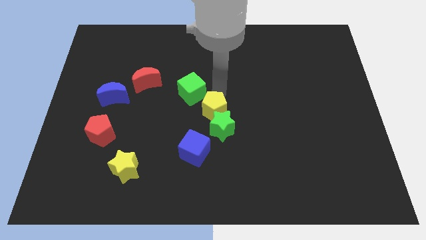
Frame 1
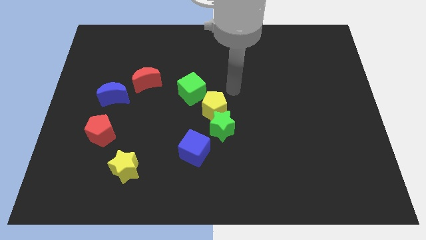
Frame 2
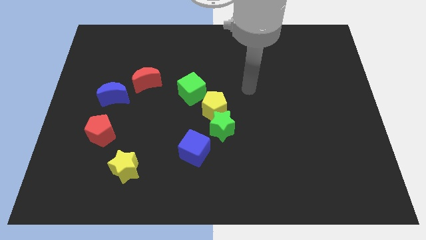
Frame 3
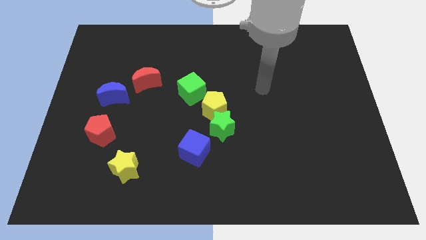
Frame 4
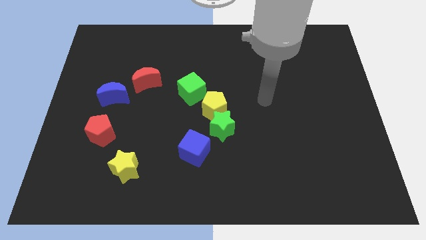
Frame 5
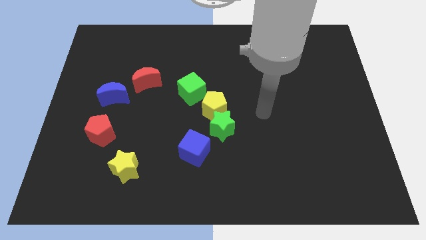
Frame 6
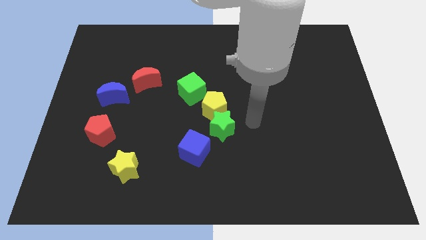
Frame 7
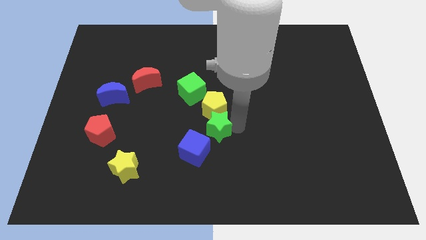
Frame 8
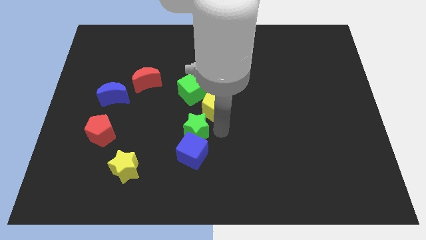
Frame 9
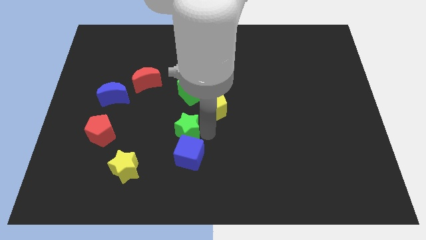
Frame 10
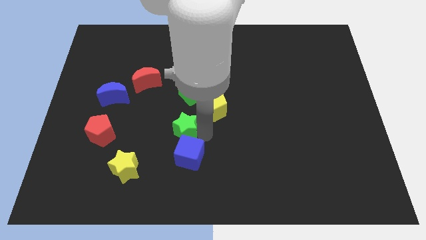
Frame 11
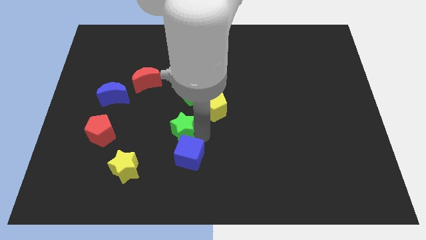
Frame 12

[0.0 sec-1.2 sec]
separate the green star from the yellow pentagon

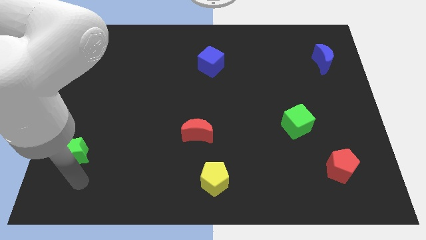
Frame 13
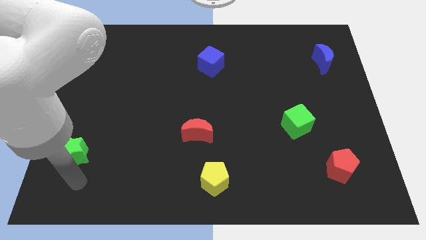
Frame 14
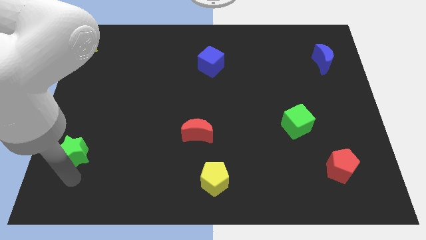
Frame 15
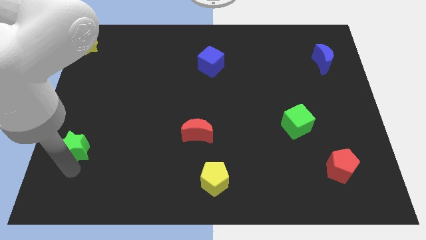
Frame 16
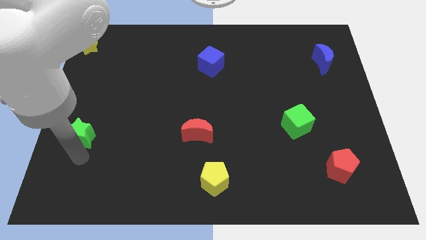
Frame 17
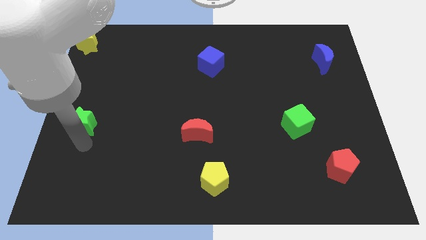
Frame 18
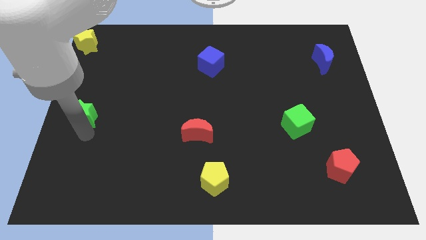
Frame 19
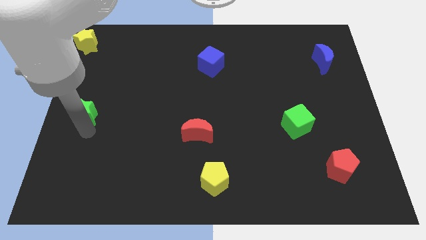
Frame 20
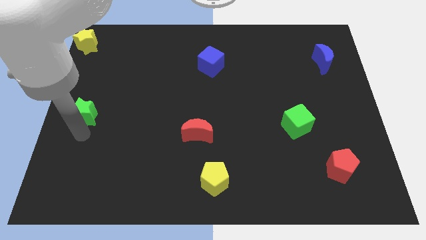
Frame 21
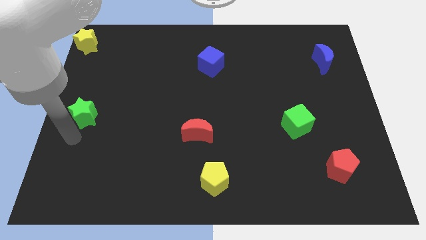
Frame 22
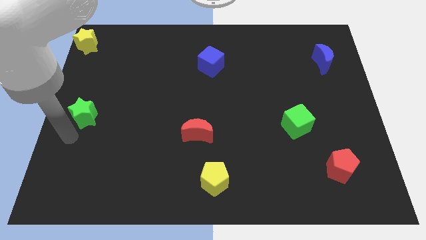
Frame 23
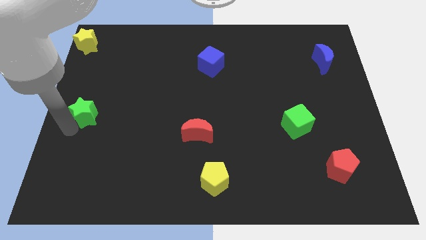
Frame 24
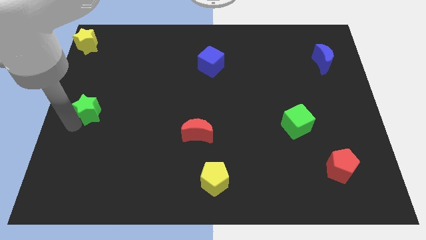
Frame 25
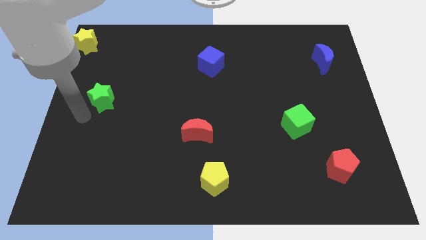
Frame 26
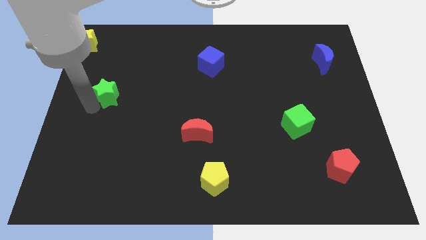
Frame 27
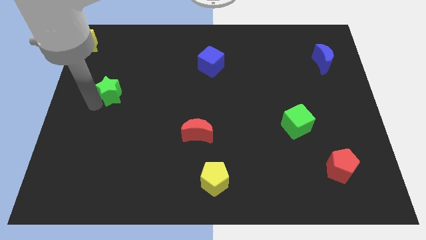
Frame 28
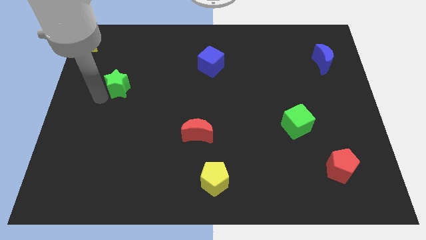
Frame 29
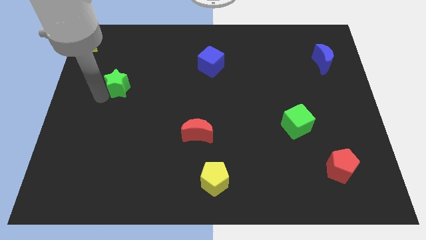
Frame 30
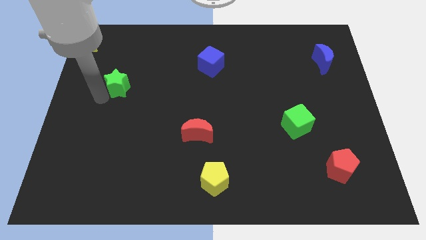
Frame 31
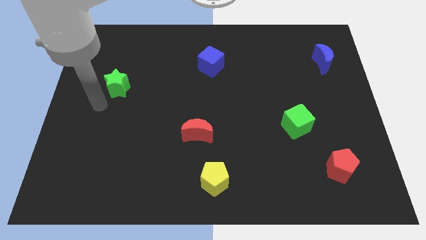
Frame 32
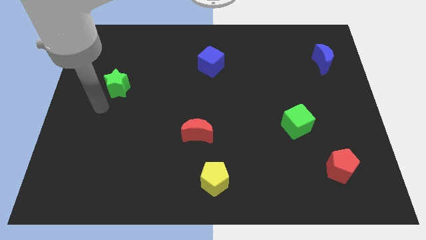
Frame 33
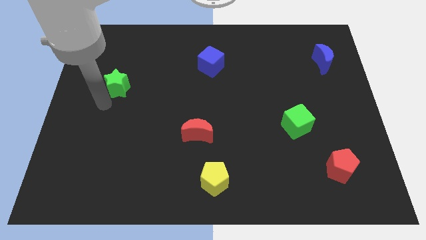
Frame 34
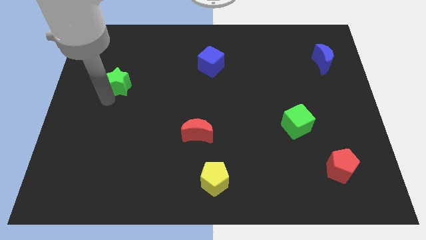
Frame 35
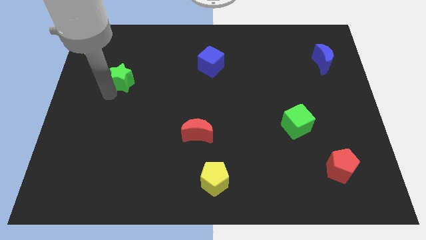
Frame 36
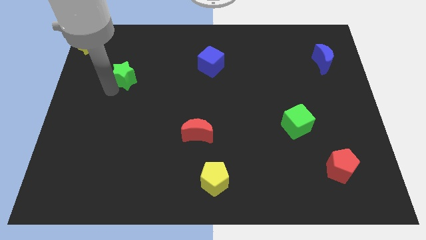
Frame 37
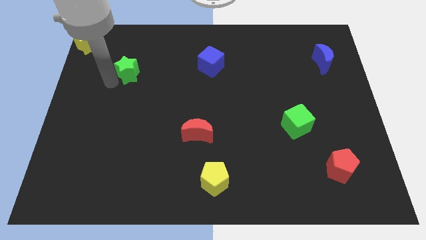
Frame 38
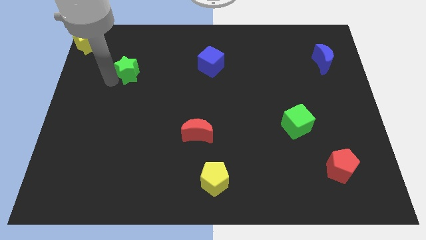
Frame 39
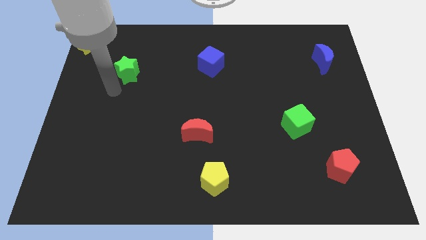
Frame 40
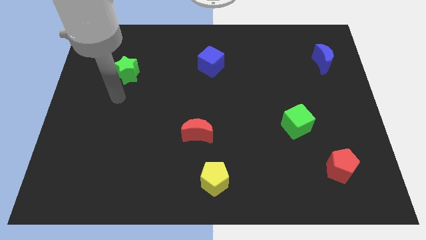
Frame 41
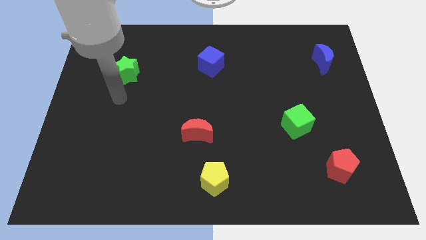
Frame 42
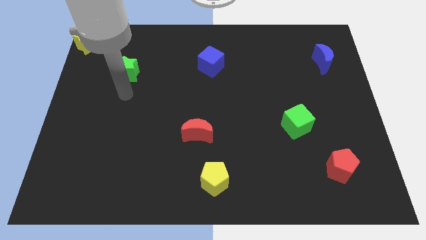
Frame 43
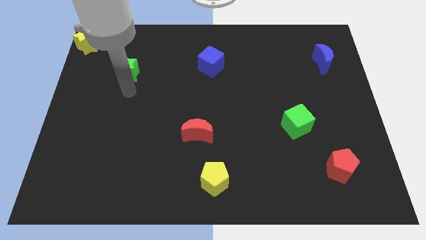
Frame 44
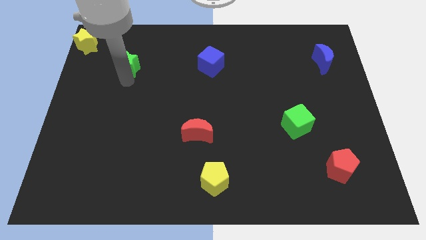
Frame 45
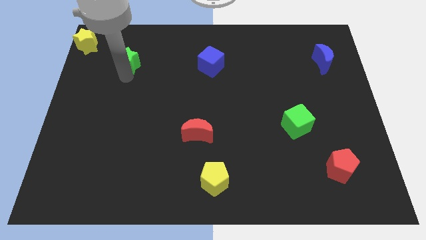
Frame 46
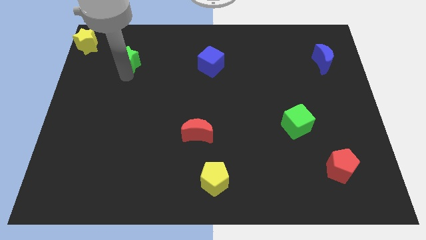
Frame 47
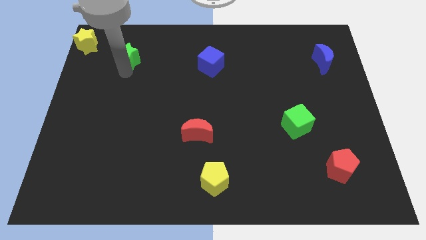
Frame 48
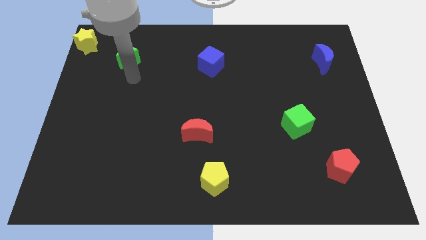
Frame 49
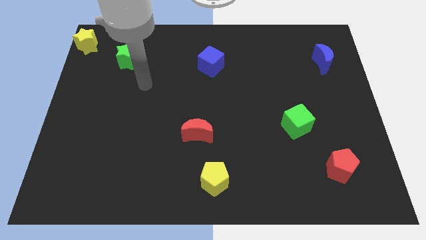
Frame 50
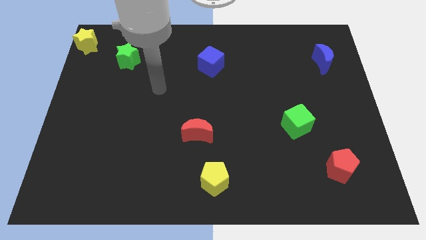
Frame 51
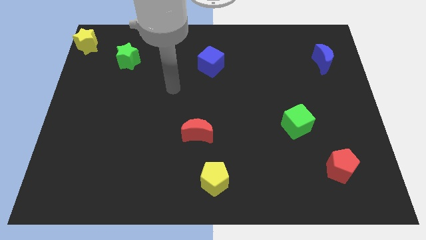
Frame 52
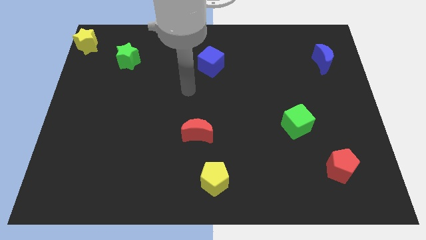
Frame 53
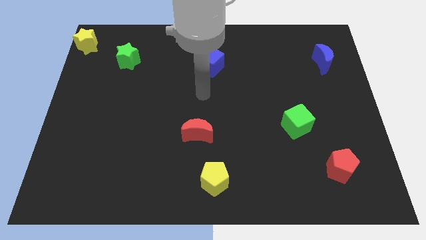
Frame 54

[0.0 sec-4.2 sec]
slide the green star slightly towards the top left side of the board

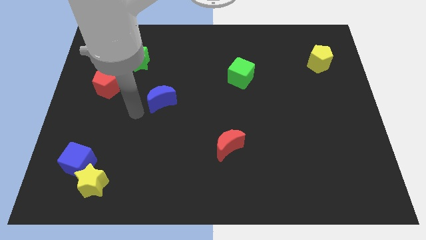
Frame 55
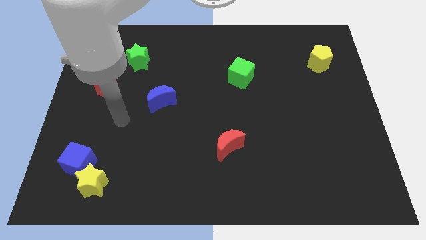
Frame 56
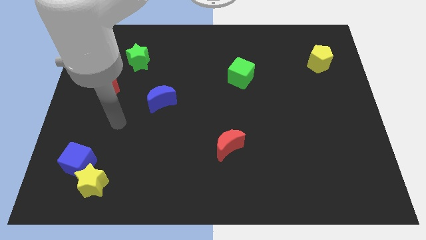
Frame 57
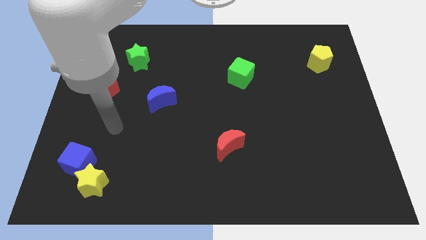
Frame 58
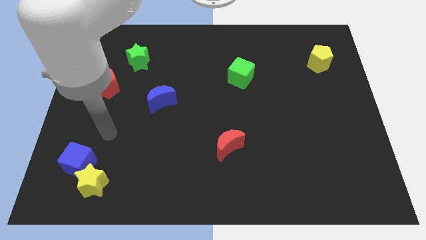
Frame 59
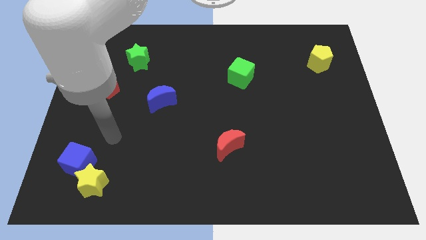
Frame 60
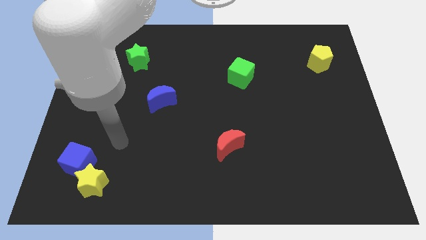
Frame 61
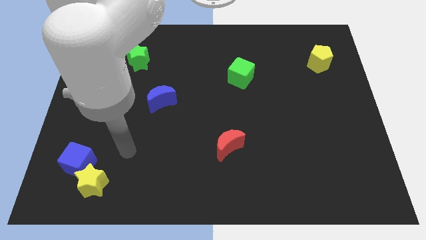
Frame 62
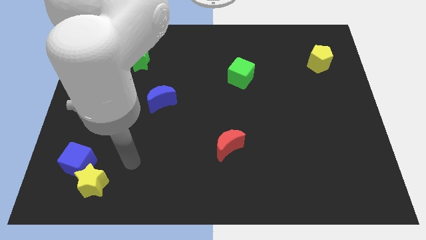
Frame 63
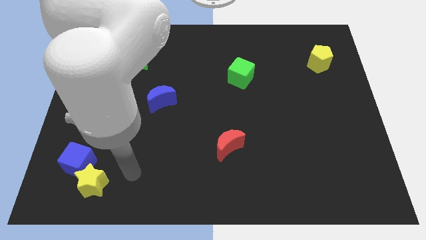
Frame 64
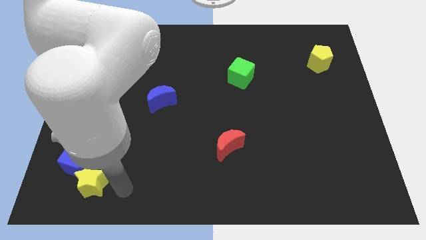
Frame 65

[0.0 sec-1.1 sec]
put your hand parallel right to the yellow star

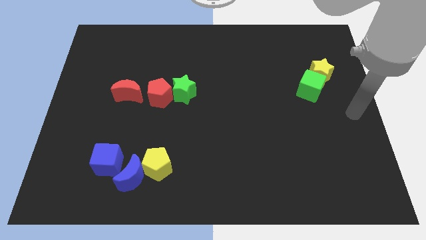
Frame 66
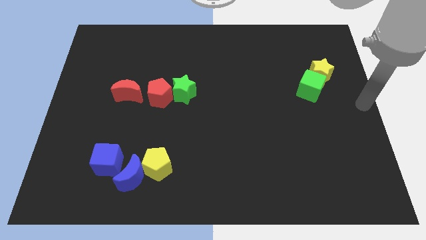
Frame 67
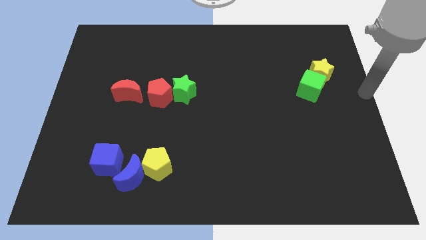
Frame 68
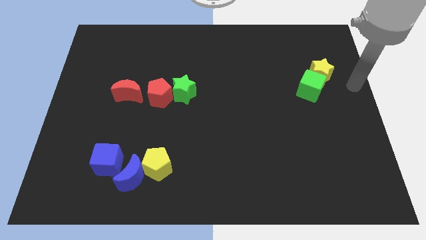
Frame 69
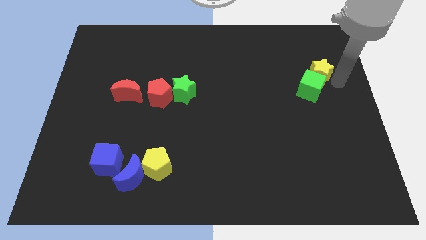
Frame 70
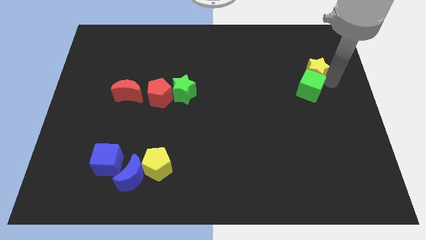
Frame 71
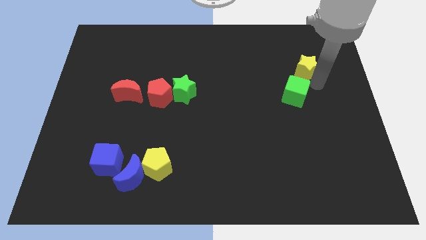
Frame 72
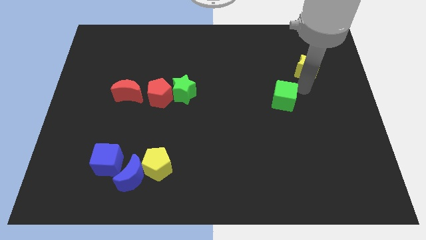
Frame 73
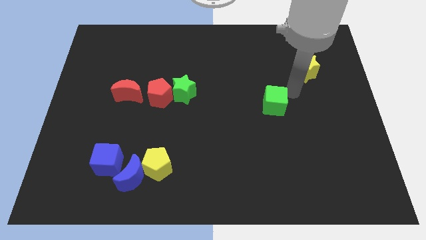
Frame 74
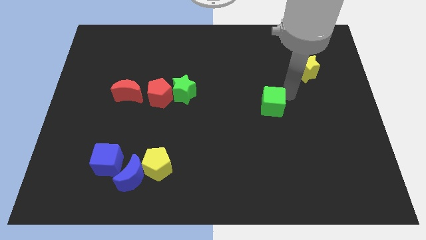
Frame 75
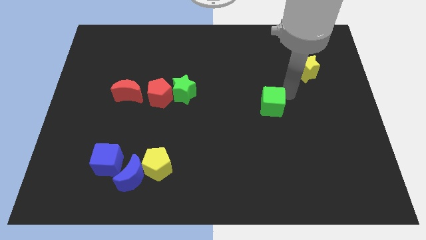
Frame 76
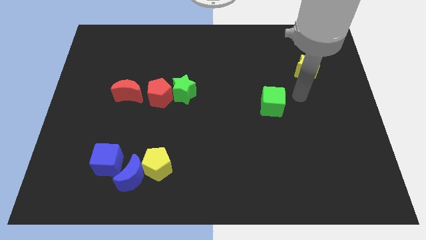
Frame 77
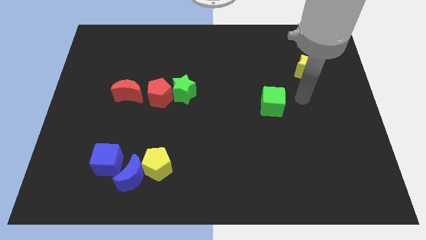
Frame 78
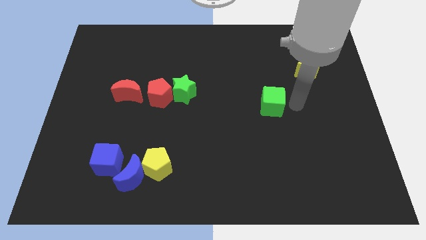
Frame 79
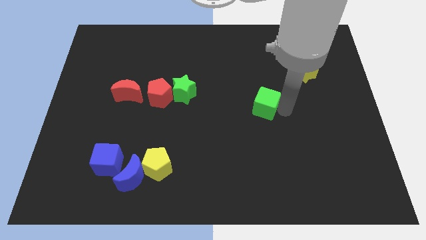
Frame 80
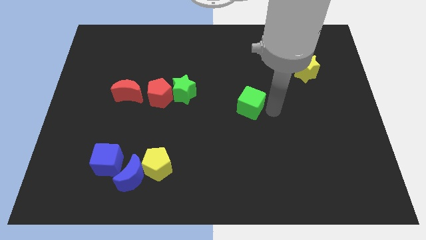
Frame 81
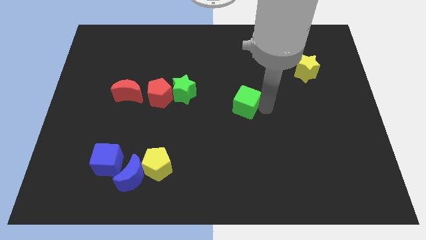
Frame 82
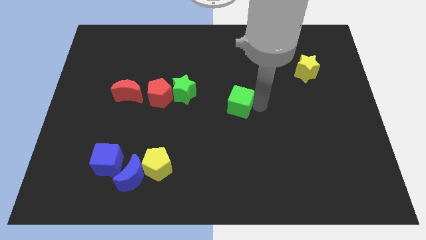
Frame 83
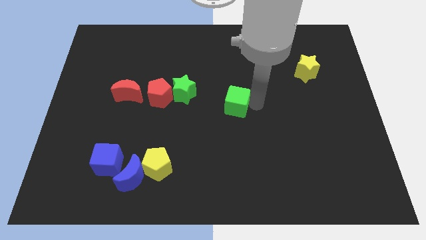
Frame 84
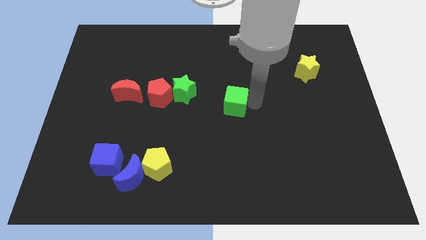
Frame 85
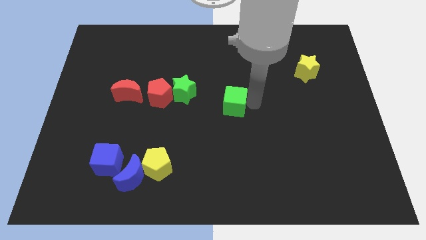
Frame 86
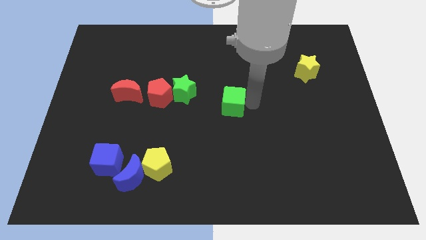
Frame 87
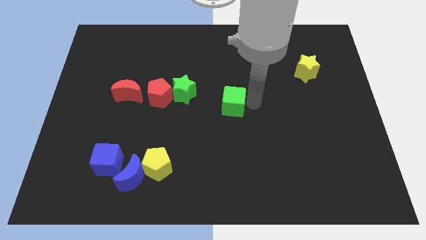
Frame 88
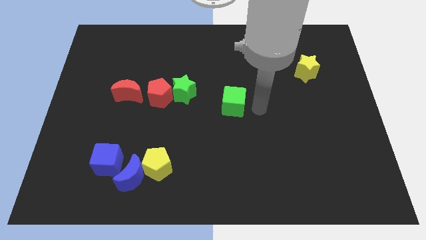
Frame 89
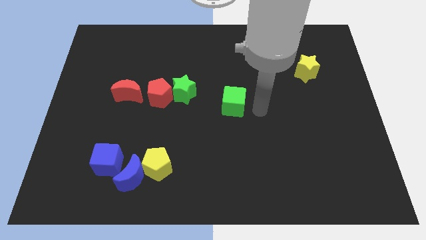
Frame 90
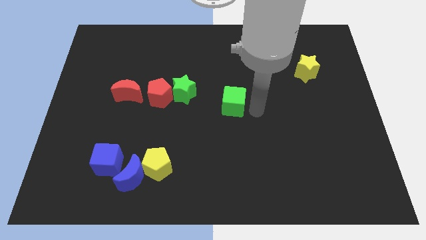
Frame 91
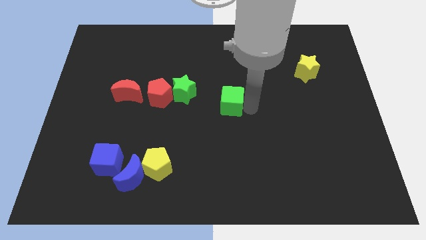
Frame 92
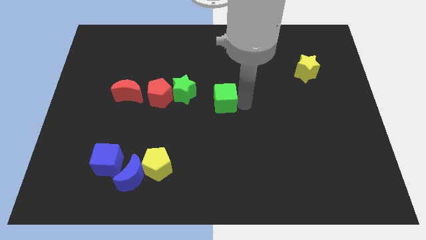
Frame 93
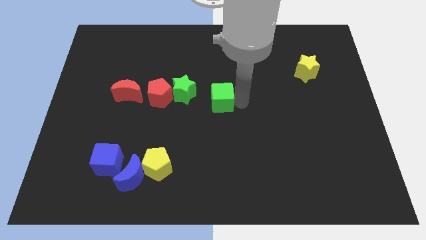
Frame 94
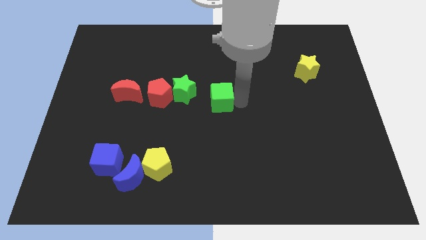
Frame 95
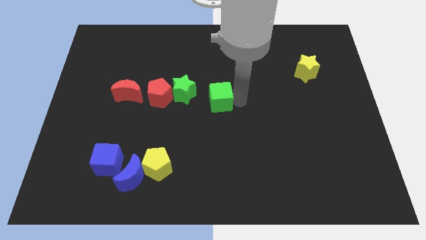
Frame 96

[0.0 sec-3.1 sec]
slide green cube towards green star
